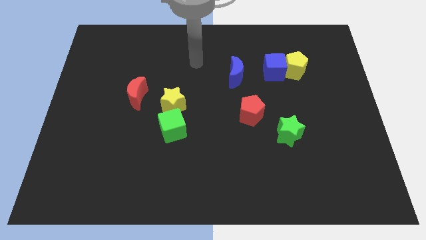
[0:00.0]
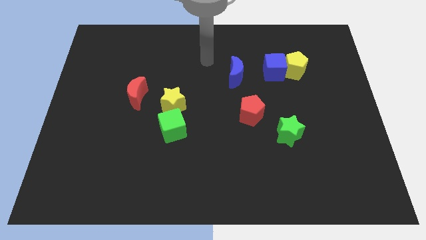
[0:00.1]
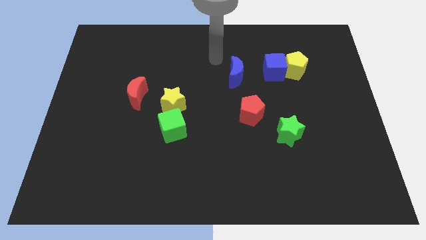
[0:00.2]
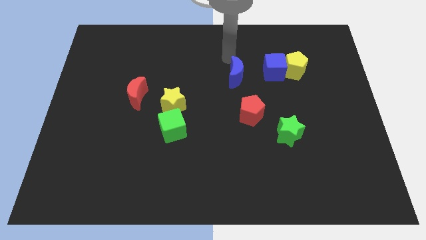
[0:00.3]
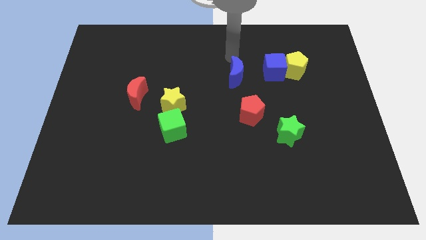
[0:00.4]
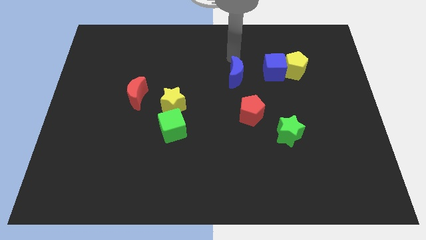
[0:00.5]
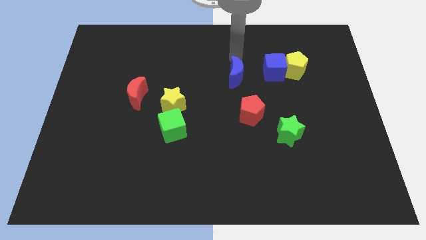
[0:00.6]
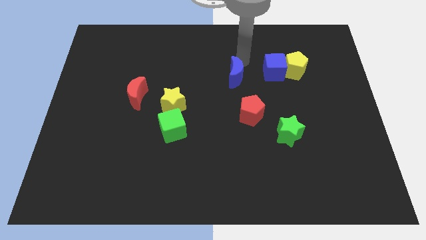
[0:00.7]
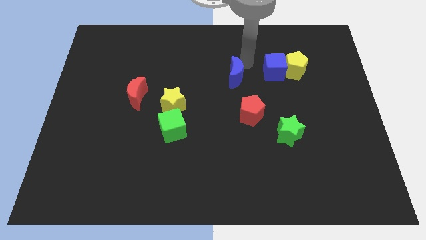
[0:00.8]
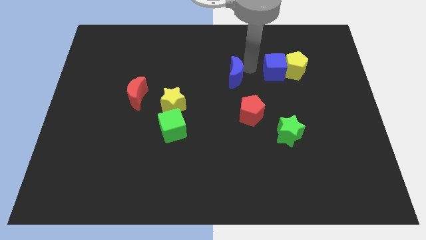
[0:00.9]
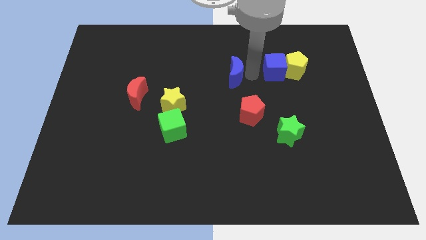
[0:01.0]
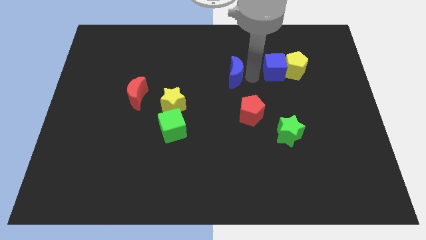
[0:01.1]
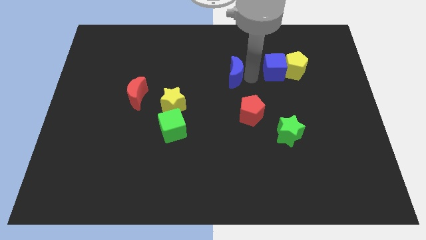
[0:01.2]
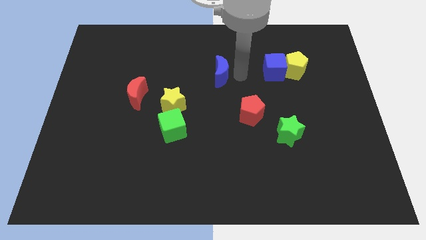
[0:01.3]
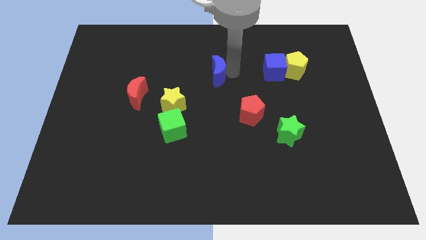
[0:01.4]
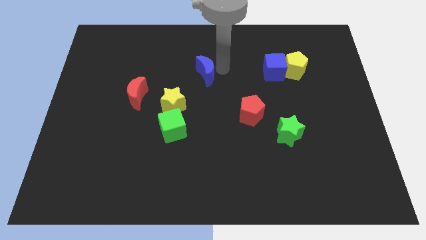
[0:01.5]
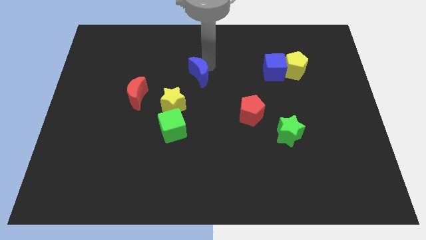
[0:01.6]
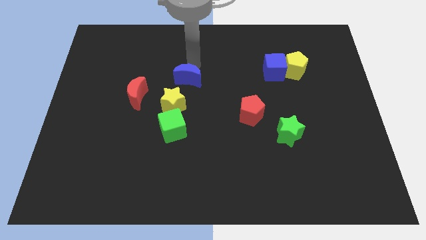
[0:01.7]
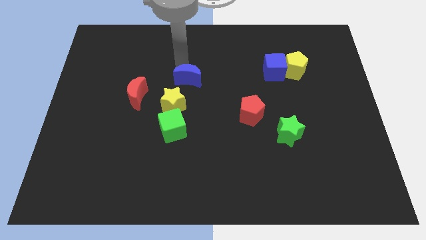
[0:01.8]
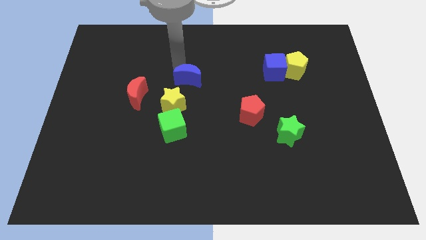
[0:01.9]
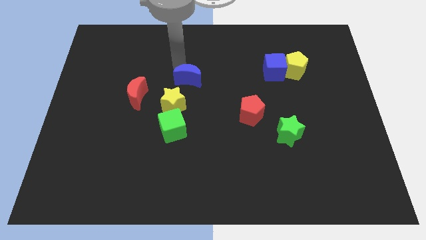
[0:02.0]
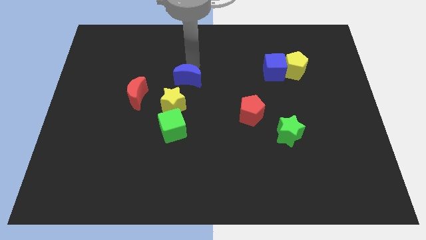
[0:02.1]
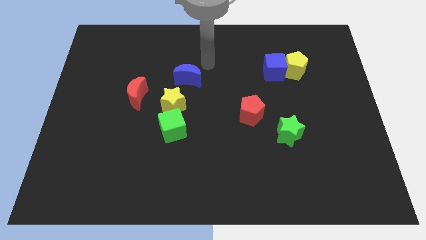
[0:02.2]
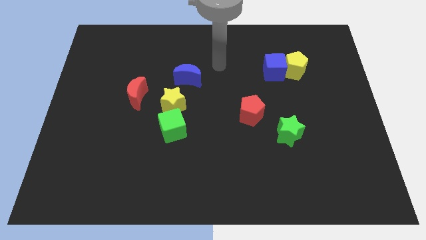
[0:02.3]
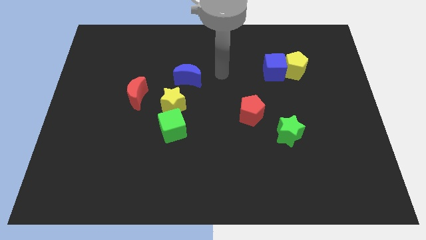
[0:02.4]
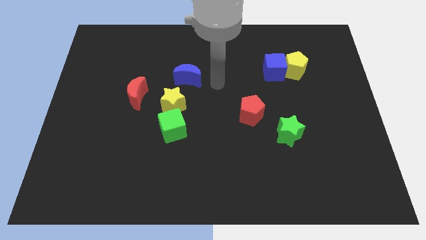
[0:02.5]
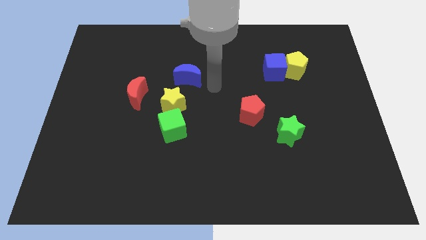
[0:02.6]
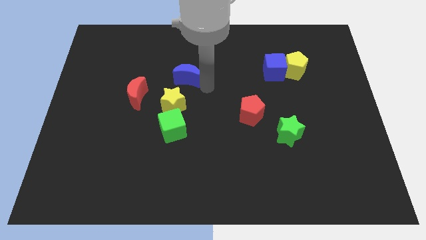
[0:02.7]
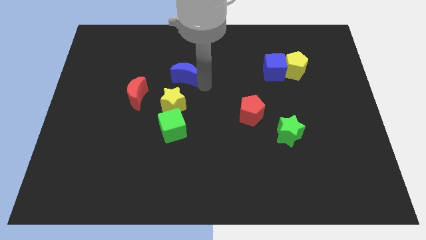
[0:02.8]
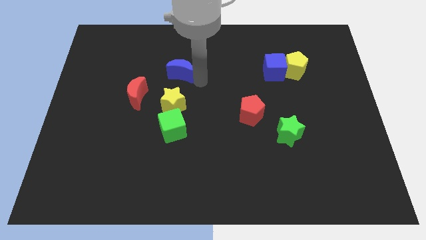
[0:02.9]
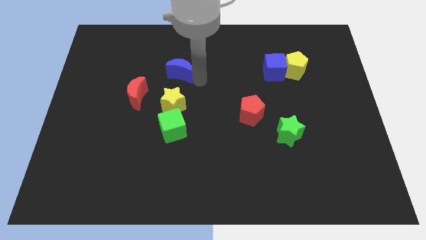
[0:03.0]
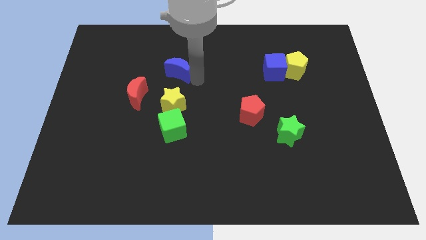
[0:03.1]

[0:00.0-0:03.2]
place the blue moon above the yellow star

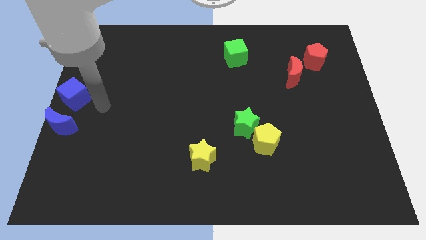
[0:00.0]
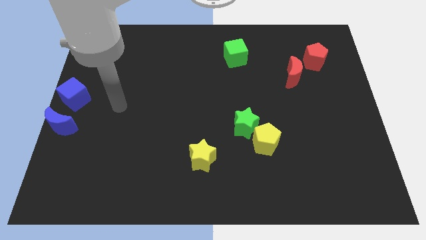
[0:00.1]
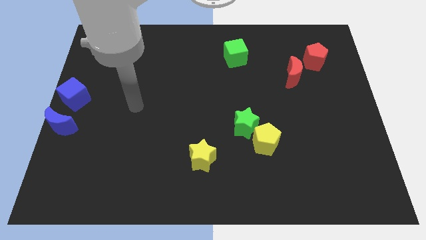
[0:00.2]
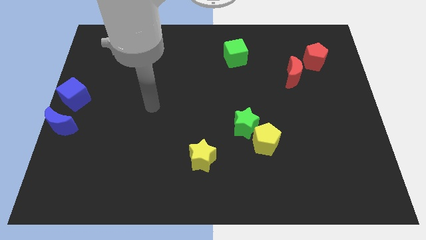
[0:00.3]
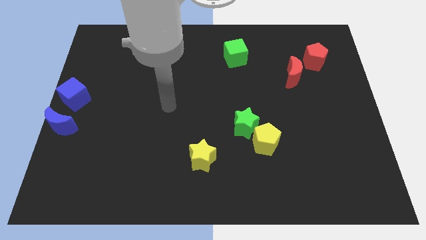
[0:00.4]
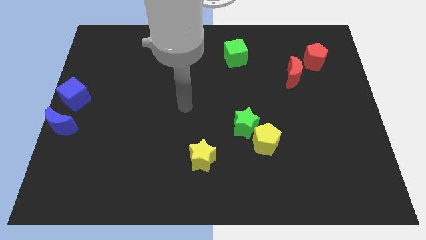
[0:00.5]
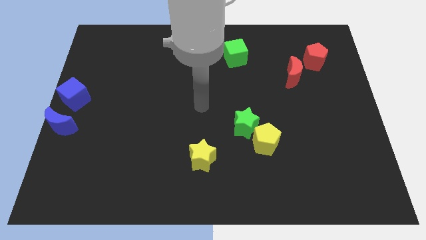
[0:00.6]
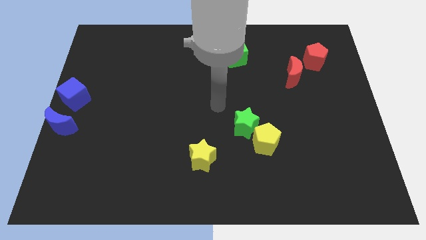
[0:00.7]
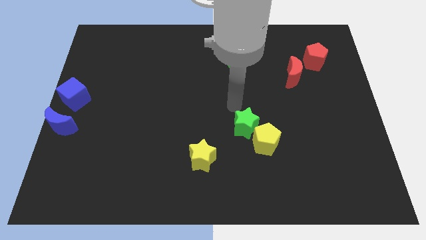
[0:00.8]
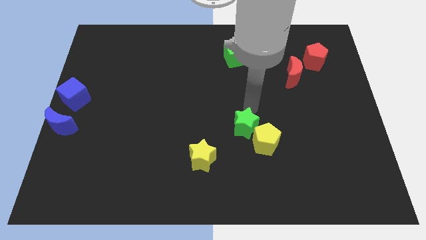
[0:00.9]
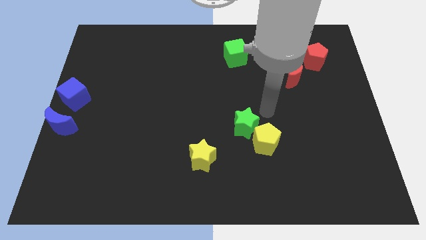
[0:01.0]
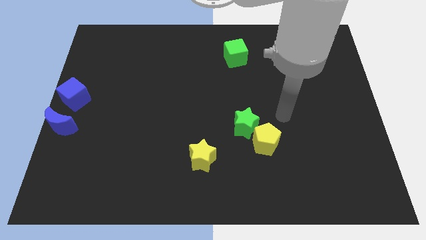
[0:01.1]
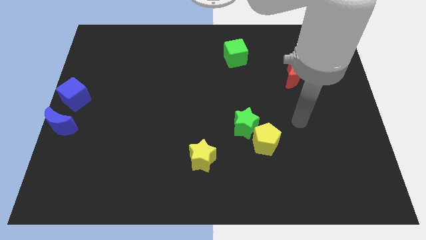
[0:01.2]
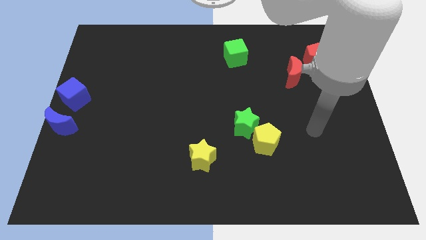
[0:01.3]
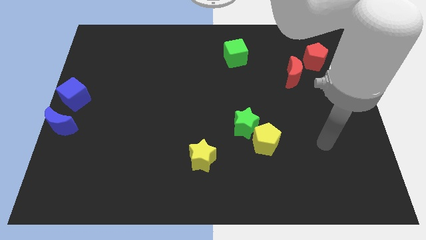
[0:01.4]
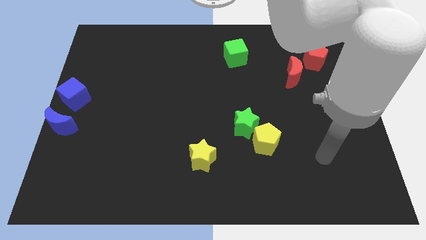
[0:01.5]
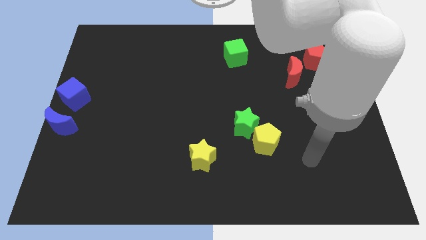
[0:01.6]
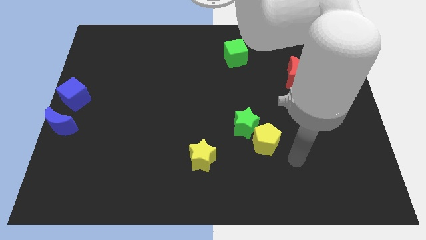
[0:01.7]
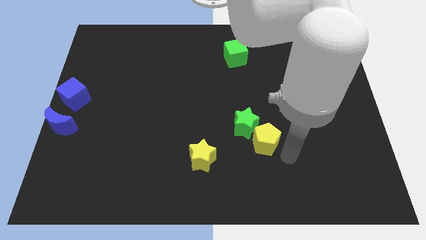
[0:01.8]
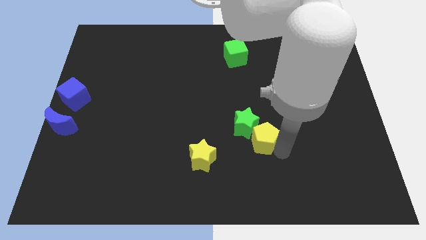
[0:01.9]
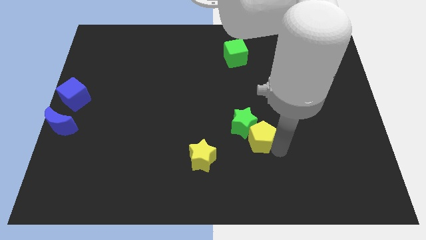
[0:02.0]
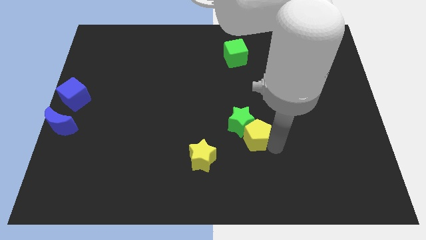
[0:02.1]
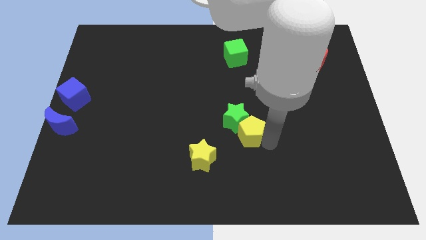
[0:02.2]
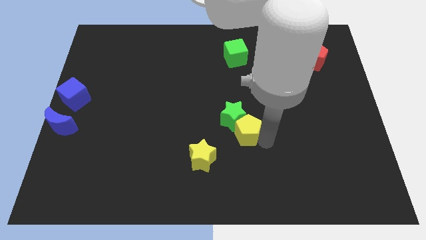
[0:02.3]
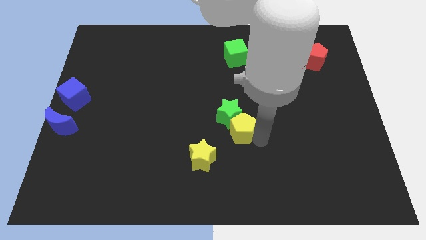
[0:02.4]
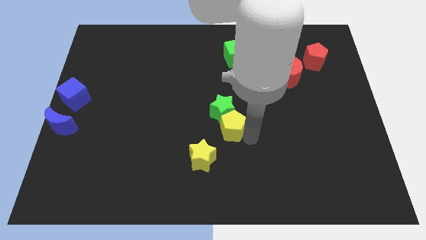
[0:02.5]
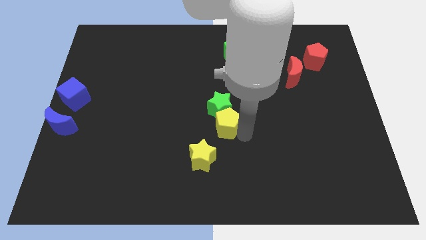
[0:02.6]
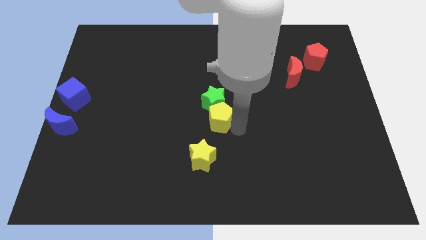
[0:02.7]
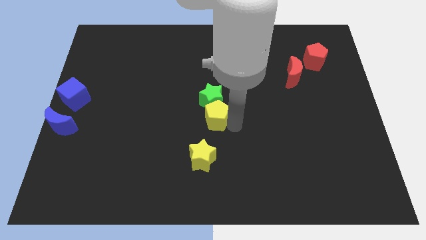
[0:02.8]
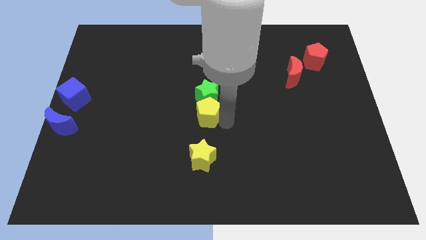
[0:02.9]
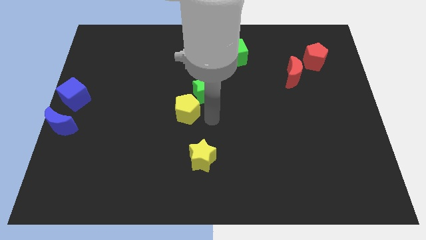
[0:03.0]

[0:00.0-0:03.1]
move the yellow pentagon and green star above yellow star

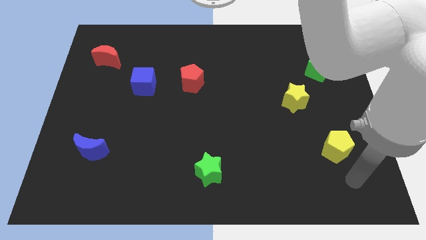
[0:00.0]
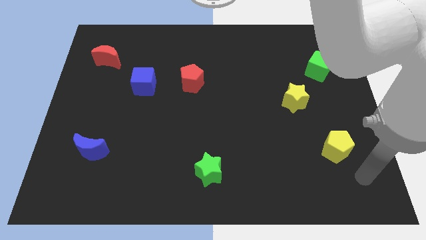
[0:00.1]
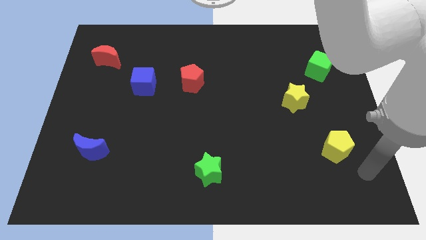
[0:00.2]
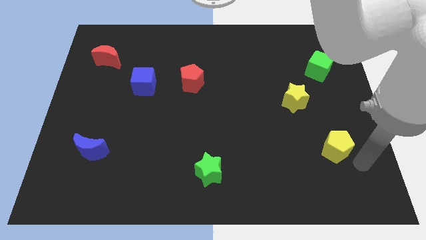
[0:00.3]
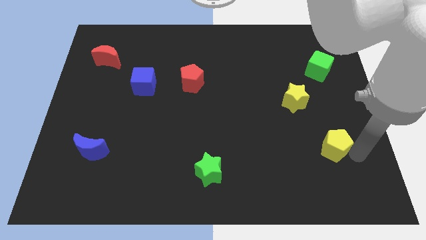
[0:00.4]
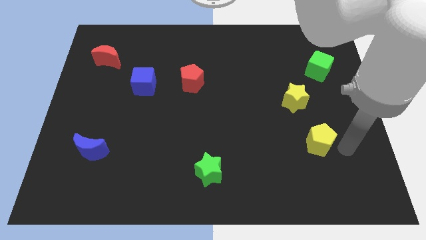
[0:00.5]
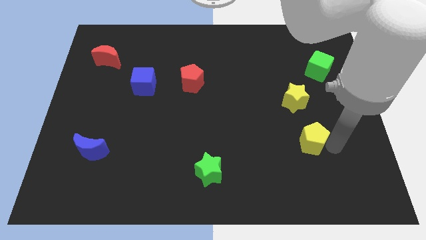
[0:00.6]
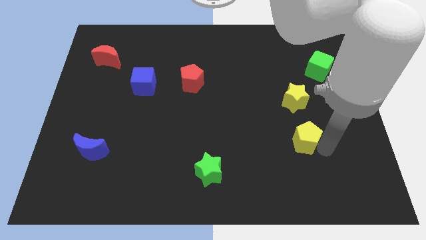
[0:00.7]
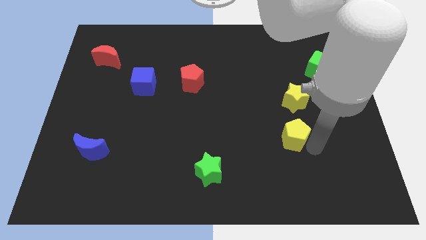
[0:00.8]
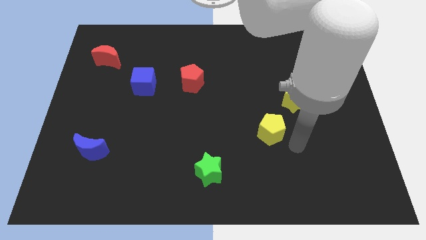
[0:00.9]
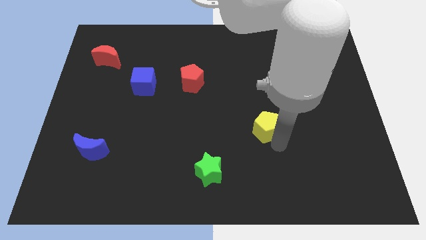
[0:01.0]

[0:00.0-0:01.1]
place yellow pentagon in between green star and yellow star

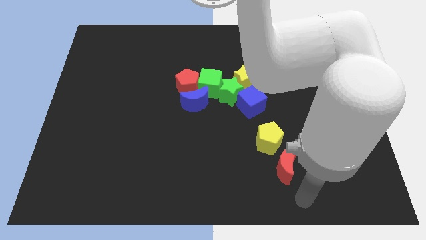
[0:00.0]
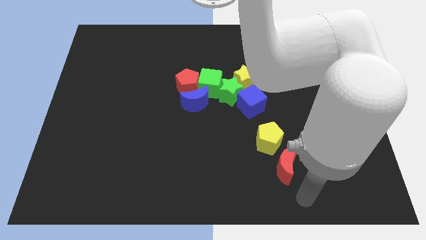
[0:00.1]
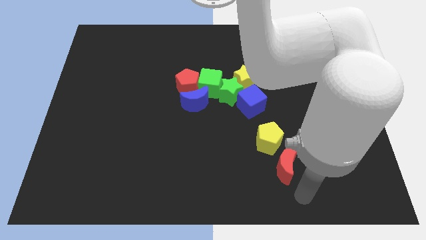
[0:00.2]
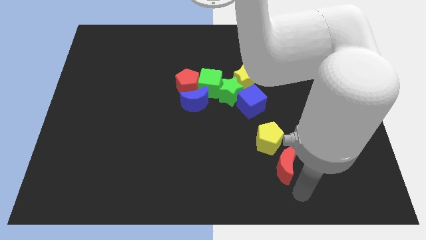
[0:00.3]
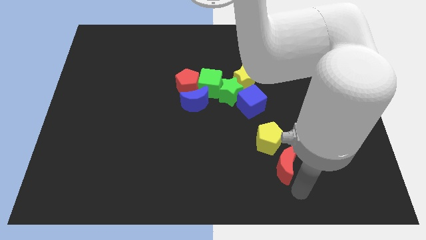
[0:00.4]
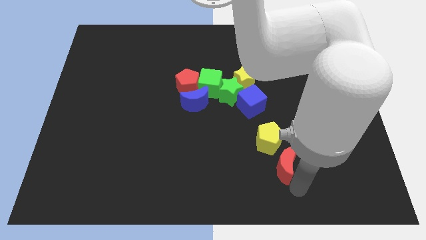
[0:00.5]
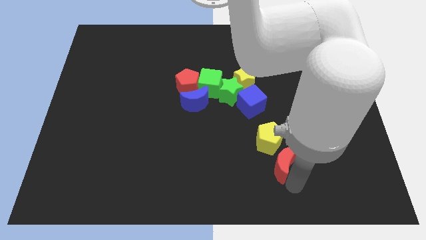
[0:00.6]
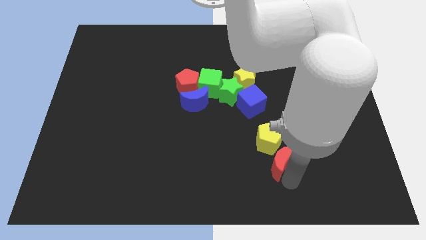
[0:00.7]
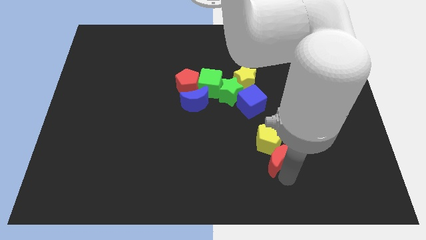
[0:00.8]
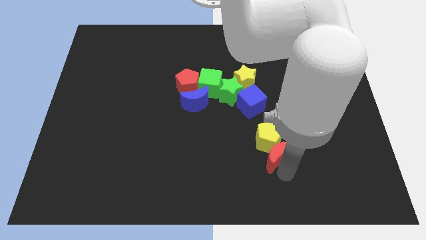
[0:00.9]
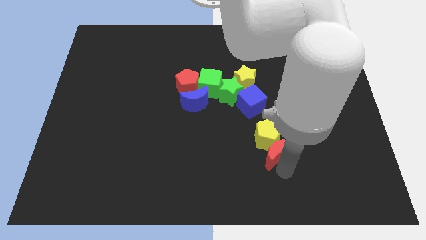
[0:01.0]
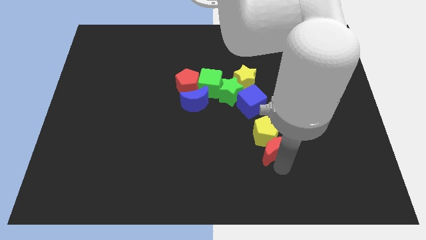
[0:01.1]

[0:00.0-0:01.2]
push the red crescent into the yellow pentagon

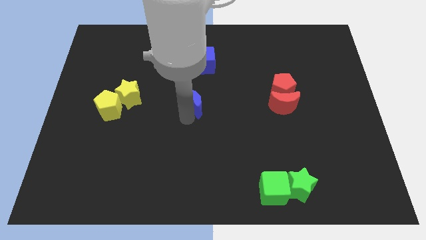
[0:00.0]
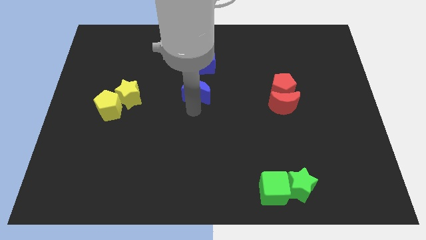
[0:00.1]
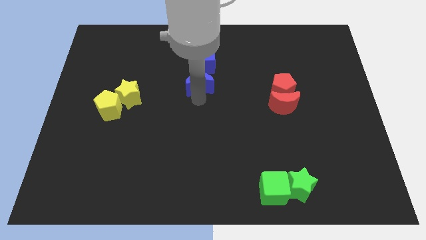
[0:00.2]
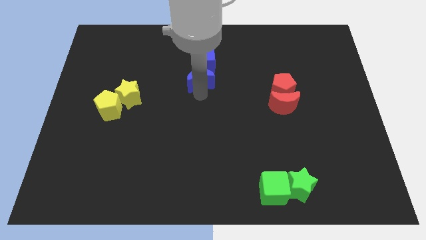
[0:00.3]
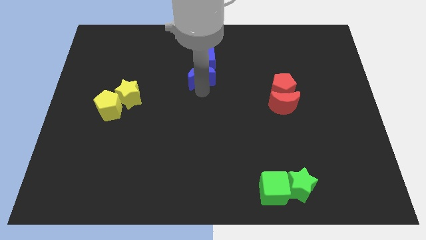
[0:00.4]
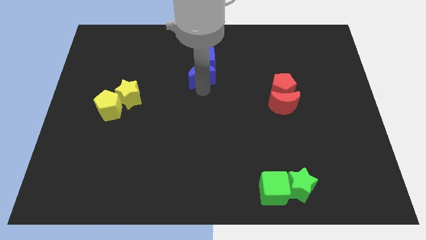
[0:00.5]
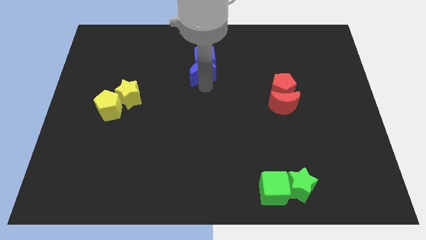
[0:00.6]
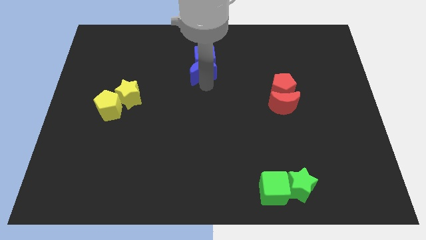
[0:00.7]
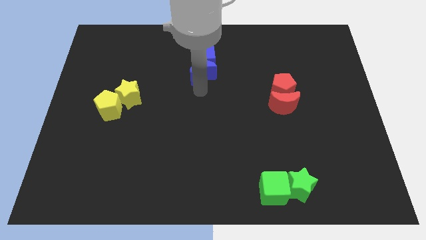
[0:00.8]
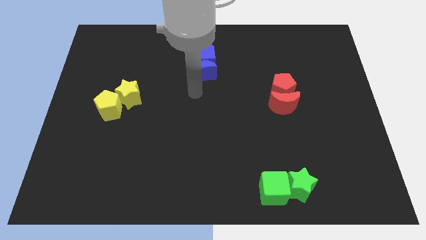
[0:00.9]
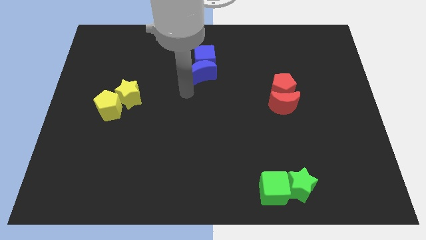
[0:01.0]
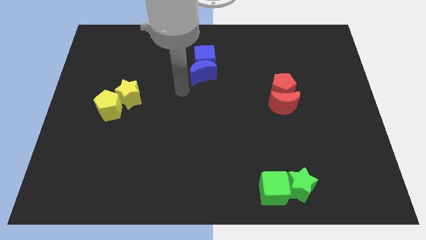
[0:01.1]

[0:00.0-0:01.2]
place the blue crescent below the blue cube
